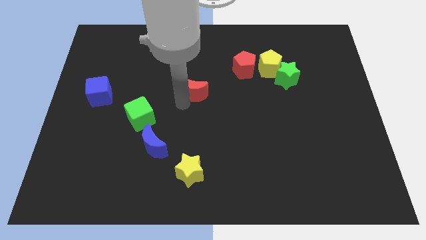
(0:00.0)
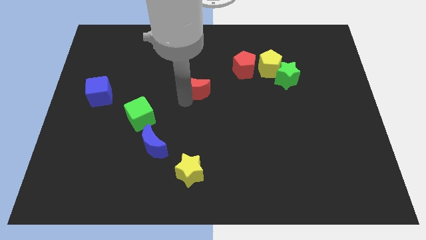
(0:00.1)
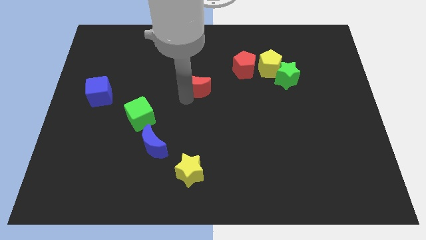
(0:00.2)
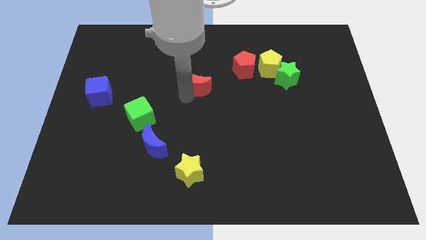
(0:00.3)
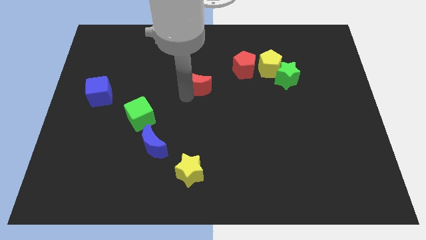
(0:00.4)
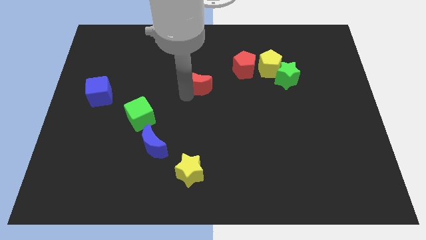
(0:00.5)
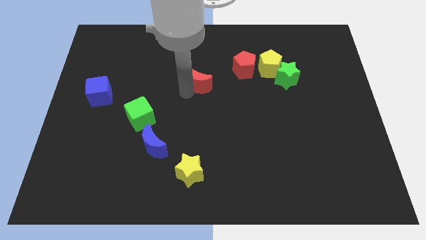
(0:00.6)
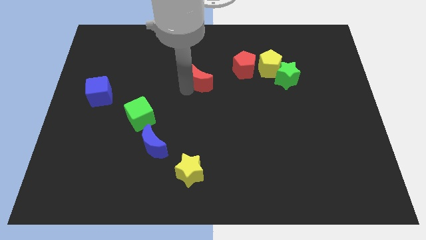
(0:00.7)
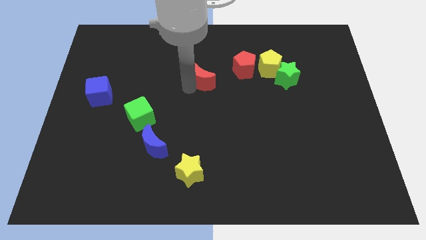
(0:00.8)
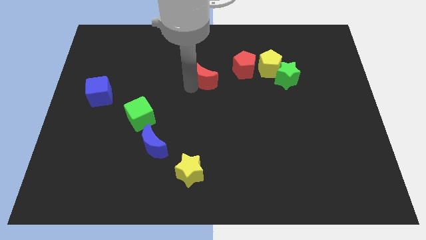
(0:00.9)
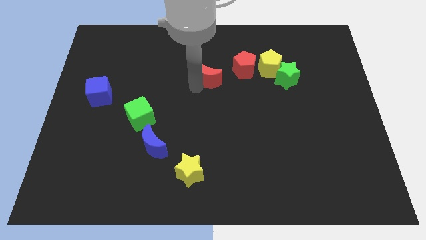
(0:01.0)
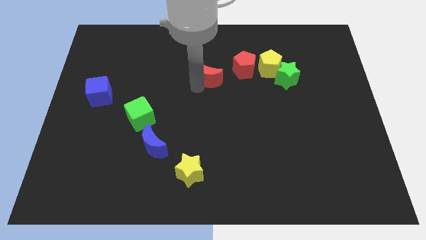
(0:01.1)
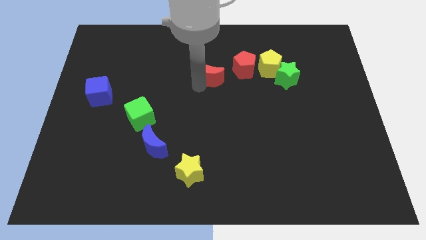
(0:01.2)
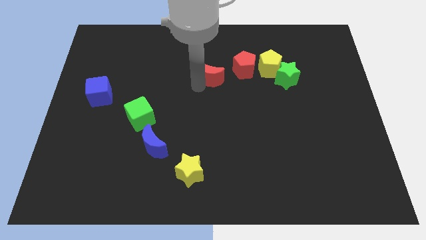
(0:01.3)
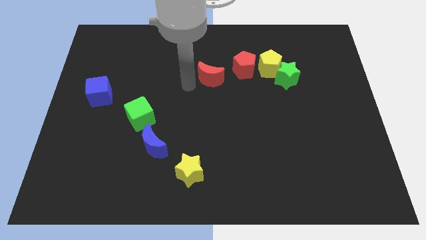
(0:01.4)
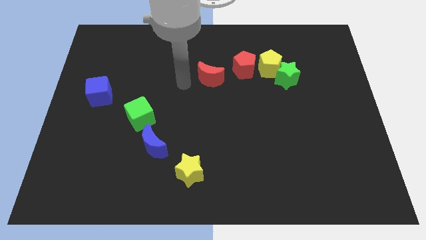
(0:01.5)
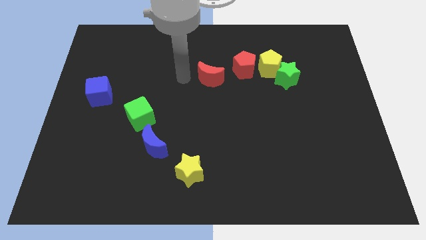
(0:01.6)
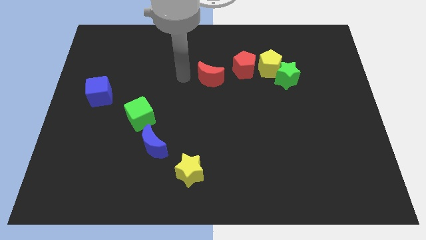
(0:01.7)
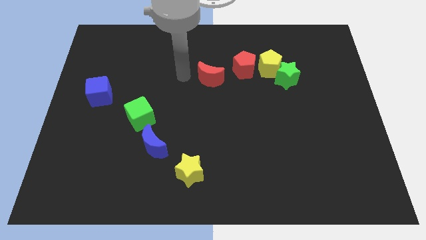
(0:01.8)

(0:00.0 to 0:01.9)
move red crescent to the bottom left of red pentagon

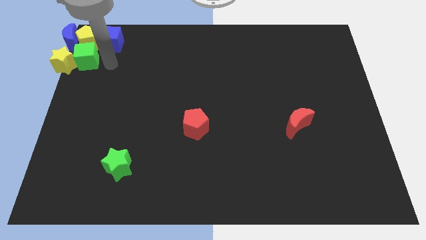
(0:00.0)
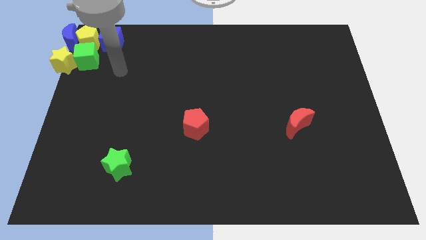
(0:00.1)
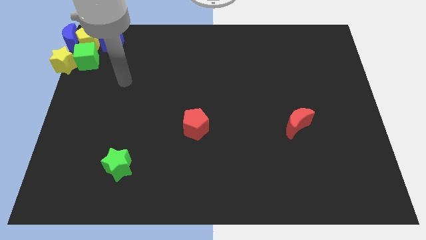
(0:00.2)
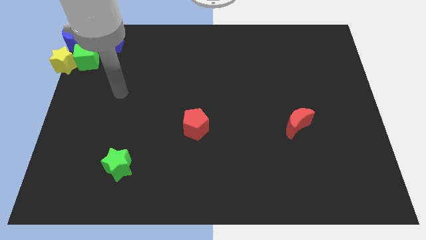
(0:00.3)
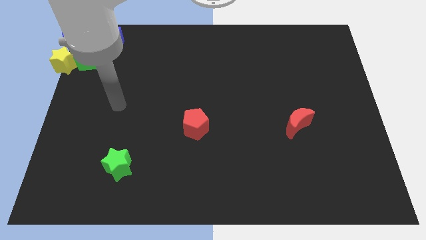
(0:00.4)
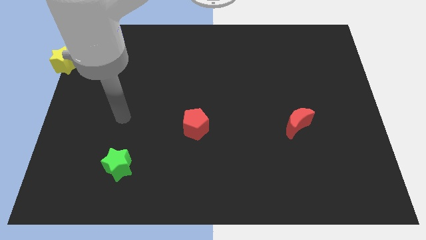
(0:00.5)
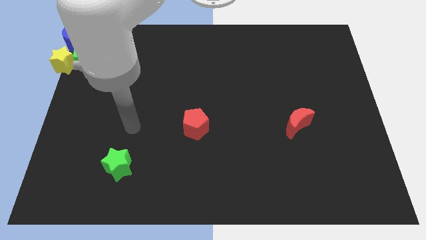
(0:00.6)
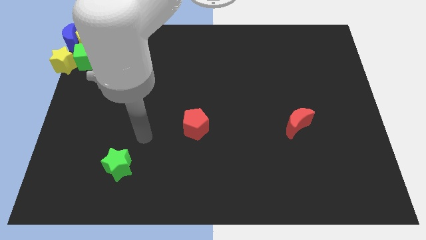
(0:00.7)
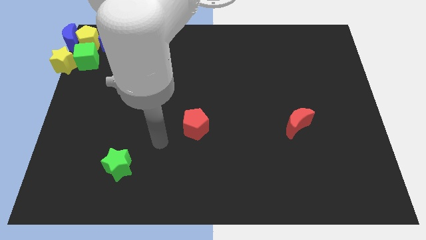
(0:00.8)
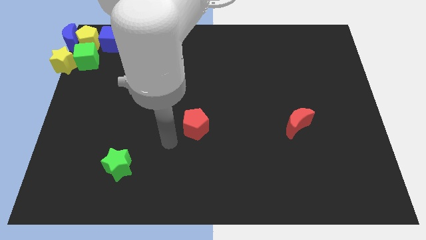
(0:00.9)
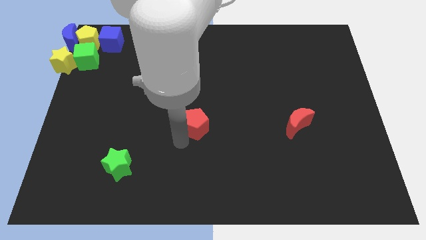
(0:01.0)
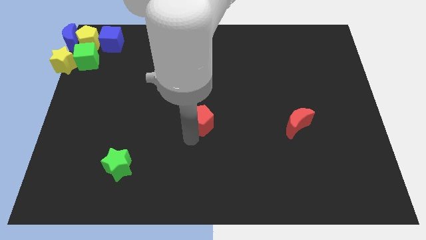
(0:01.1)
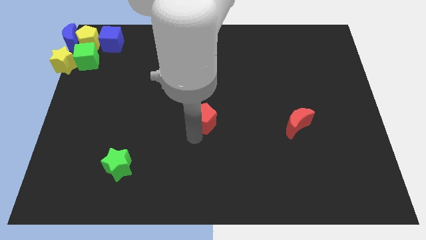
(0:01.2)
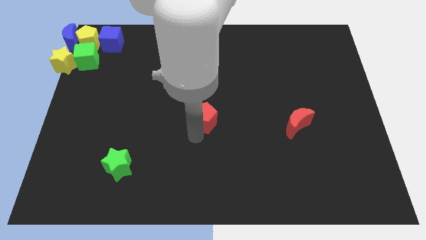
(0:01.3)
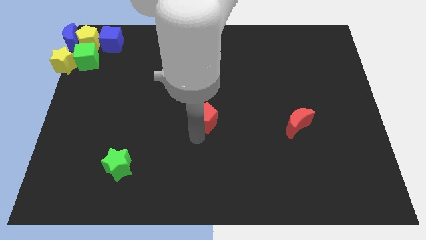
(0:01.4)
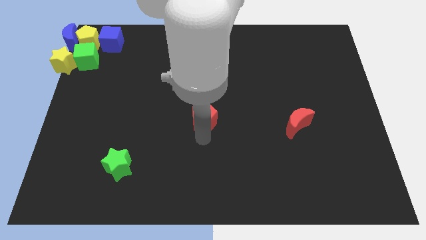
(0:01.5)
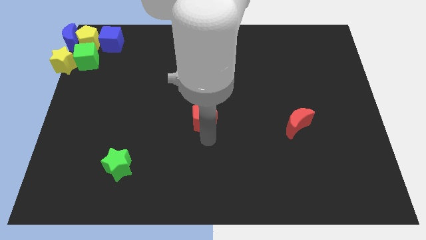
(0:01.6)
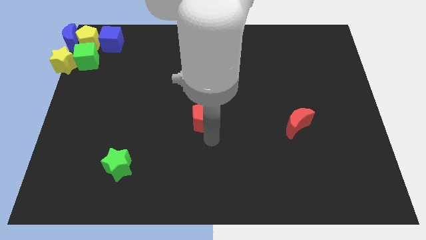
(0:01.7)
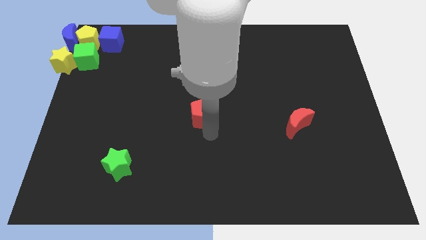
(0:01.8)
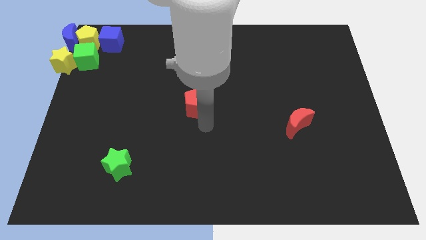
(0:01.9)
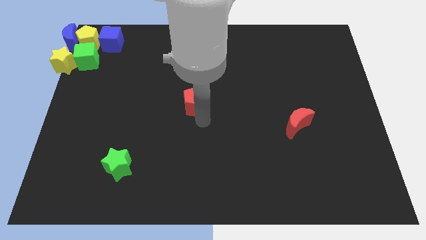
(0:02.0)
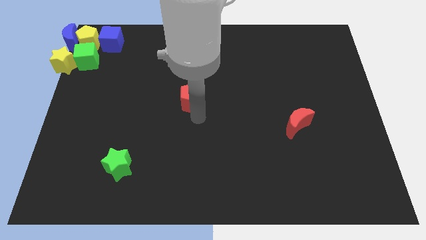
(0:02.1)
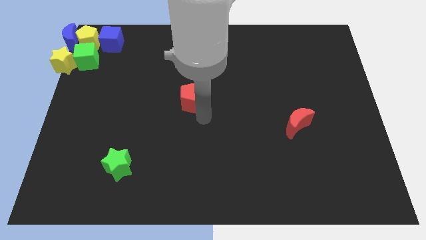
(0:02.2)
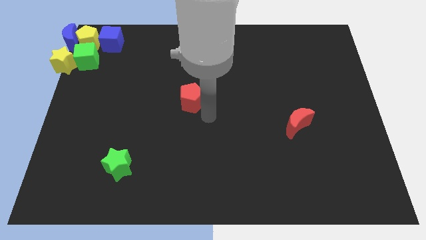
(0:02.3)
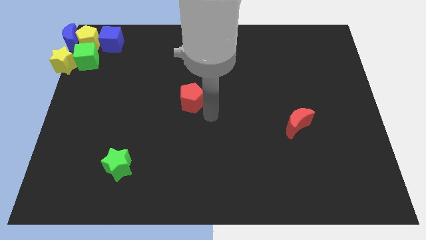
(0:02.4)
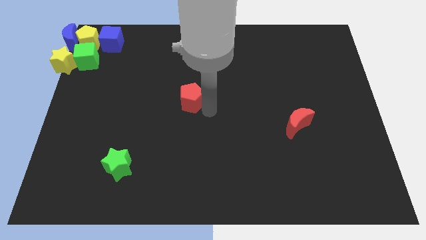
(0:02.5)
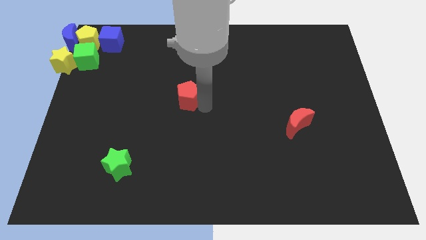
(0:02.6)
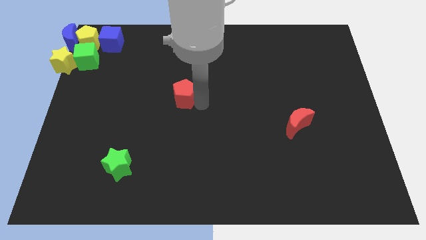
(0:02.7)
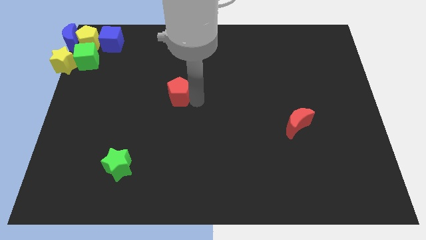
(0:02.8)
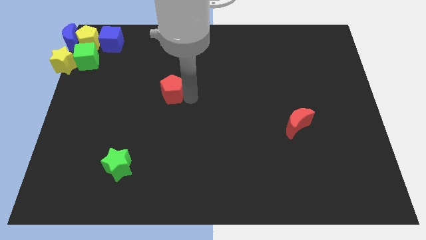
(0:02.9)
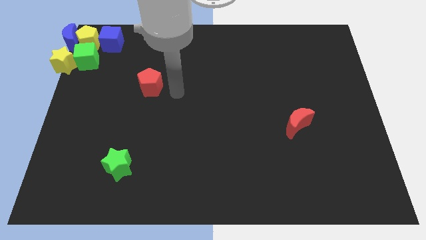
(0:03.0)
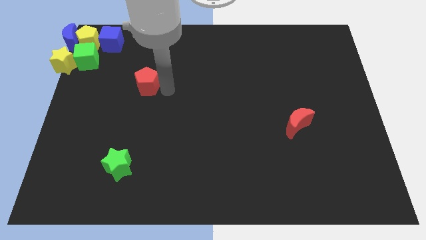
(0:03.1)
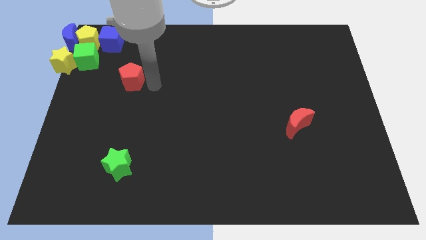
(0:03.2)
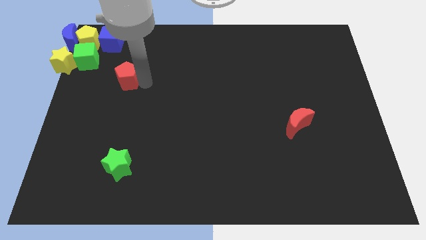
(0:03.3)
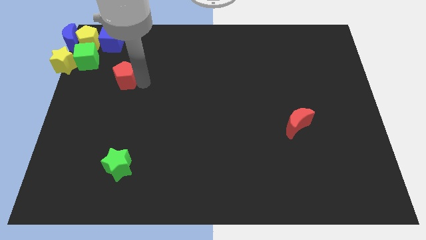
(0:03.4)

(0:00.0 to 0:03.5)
push the red pentagon towards the green cube

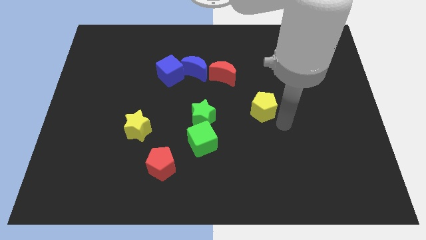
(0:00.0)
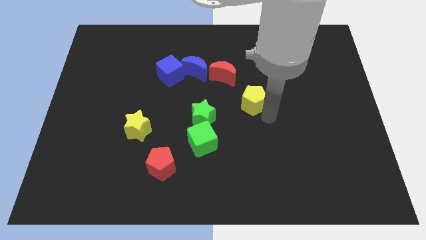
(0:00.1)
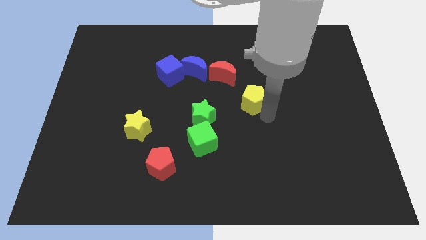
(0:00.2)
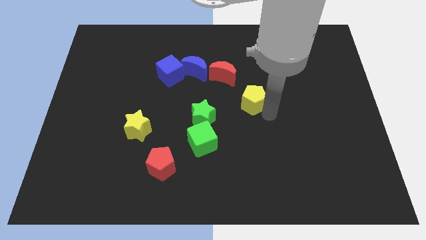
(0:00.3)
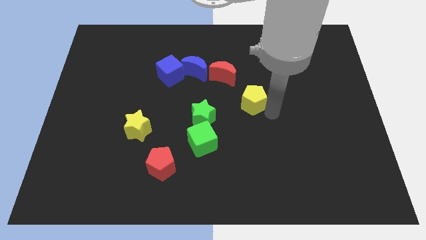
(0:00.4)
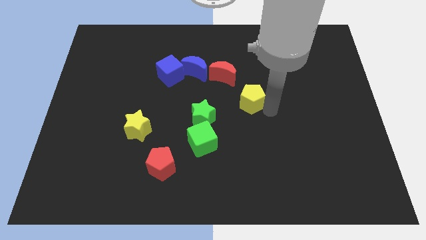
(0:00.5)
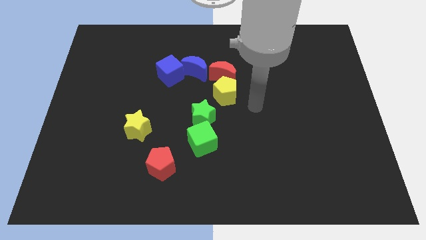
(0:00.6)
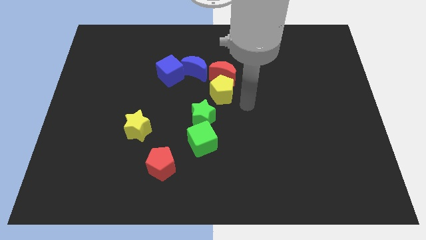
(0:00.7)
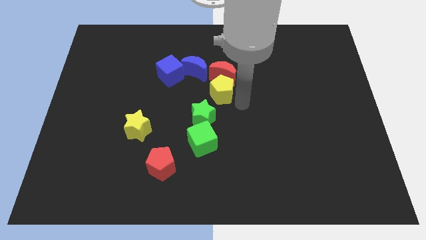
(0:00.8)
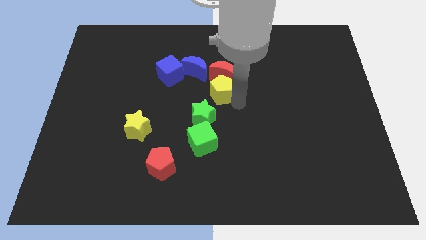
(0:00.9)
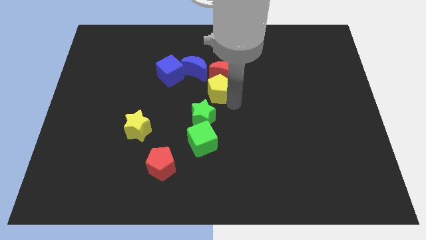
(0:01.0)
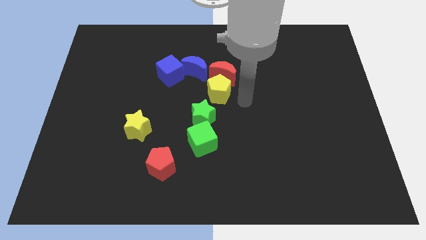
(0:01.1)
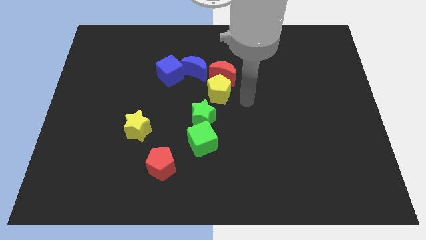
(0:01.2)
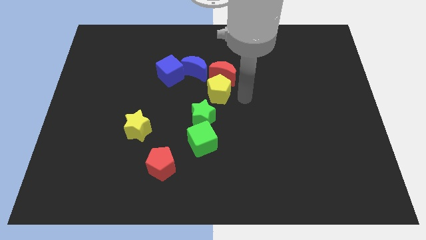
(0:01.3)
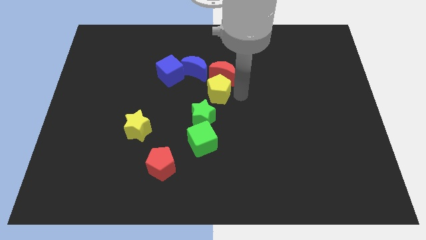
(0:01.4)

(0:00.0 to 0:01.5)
push the yellow pentagon below the red crescent

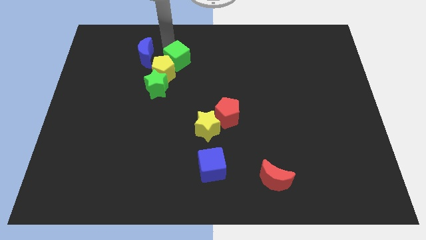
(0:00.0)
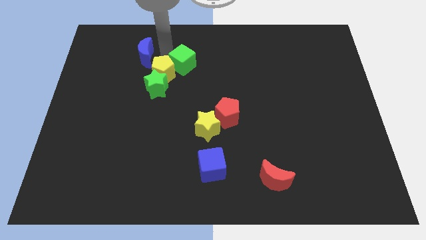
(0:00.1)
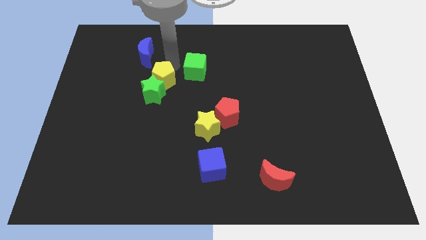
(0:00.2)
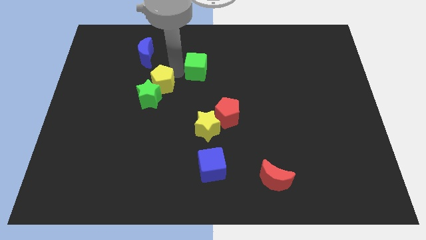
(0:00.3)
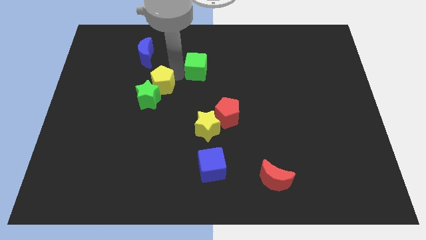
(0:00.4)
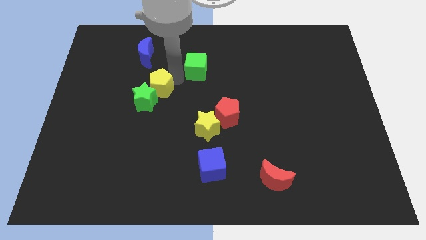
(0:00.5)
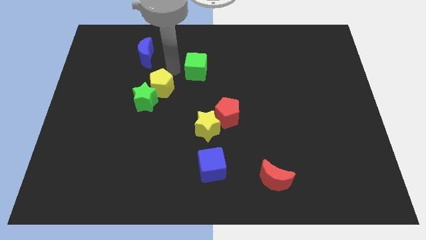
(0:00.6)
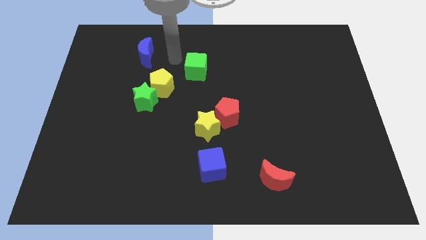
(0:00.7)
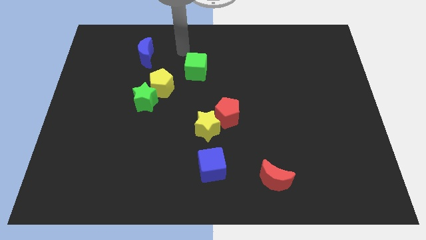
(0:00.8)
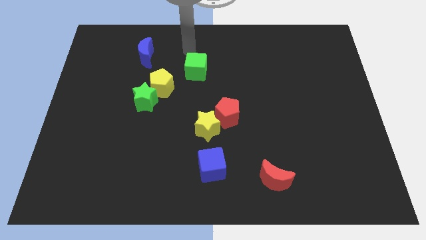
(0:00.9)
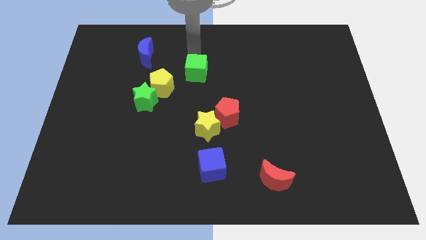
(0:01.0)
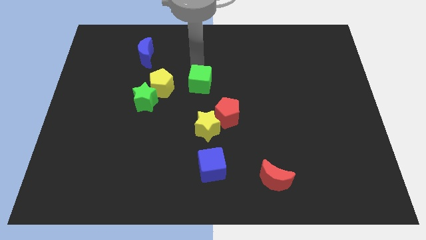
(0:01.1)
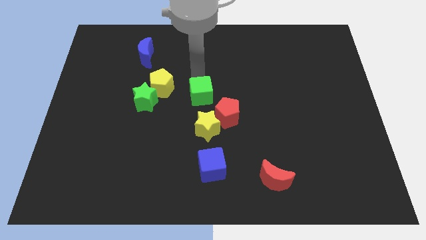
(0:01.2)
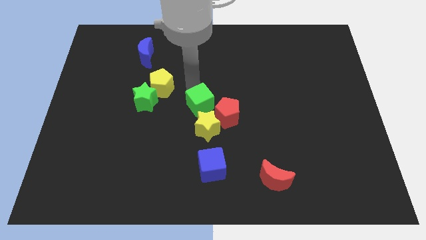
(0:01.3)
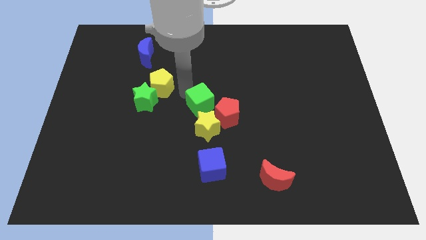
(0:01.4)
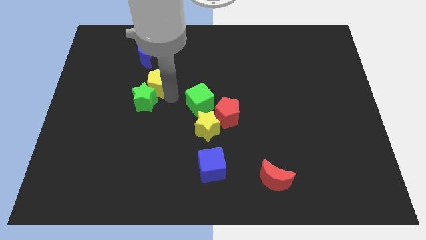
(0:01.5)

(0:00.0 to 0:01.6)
separate the green cube from the yellow pentagon

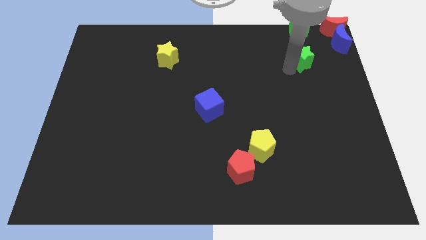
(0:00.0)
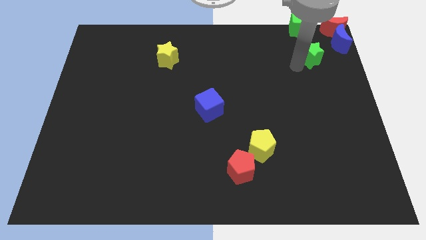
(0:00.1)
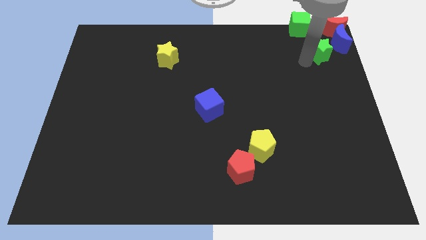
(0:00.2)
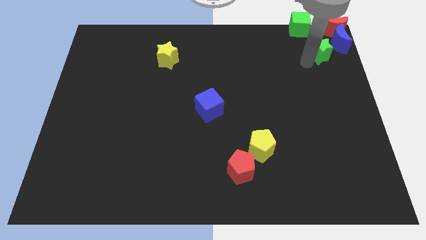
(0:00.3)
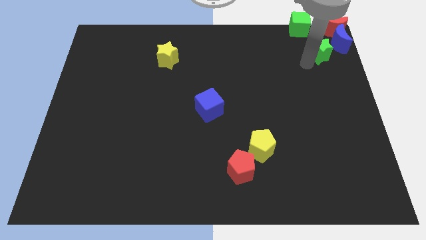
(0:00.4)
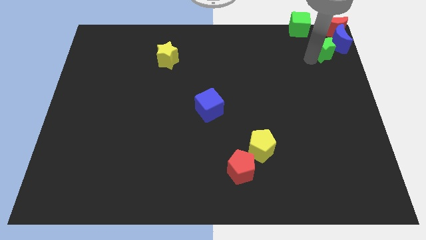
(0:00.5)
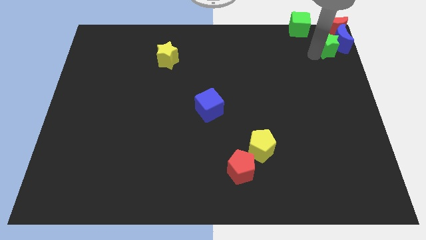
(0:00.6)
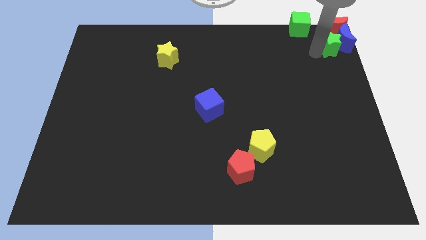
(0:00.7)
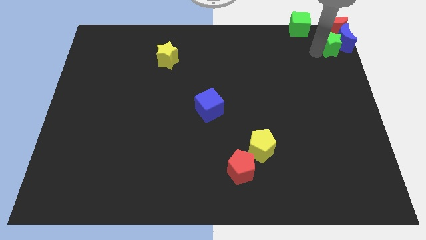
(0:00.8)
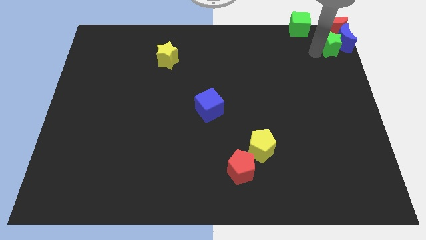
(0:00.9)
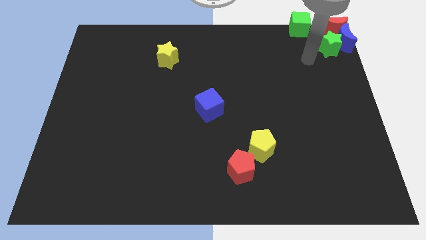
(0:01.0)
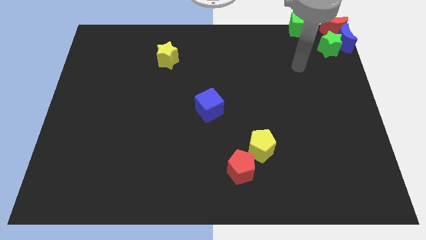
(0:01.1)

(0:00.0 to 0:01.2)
push the green star into the blue moon
